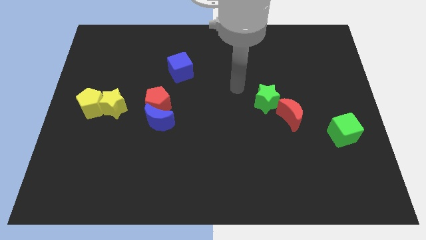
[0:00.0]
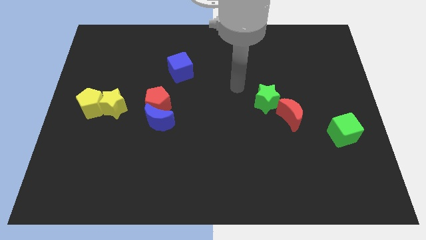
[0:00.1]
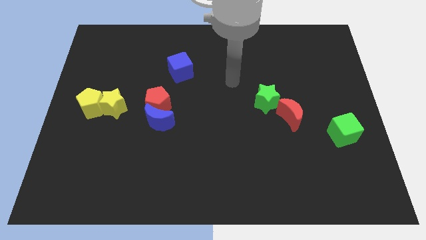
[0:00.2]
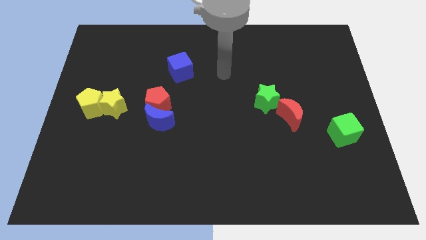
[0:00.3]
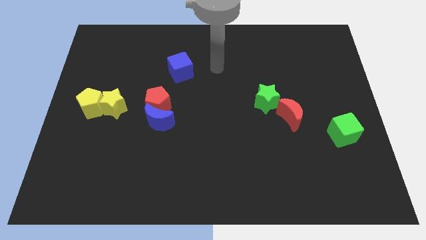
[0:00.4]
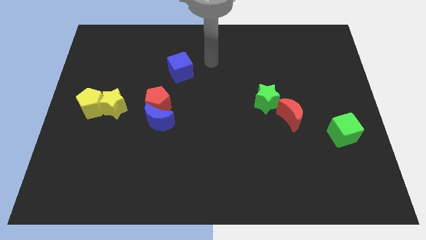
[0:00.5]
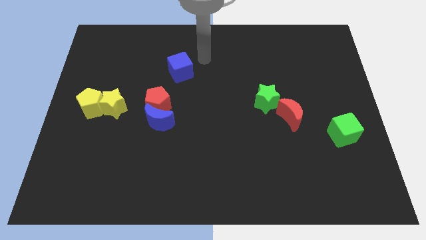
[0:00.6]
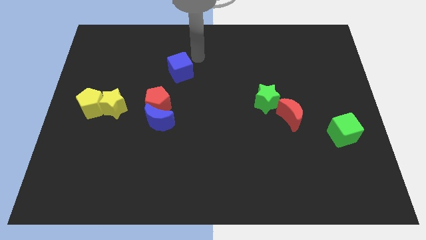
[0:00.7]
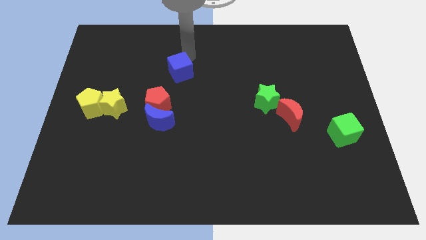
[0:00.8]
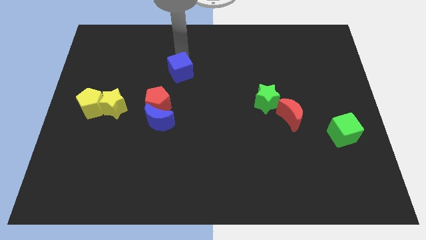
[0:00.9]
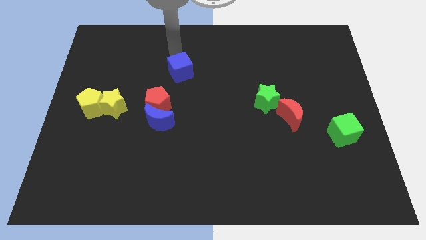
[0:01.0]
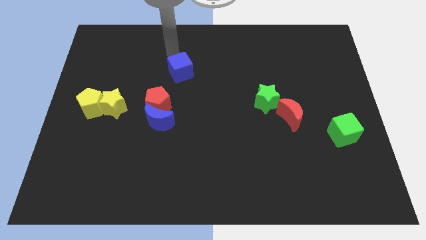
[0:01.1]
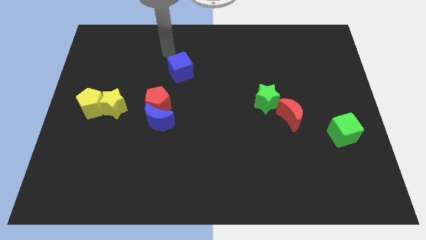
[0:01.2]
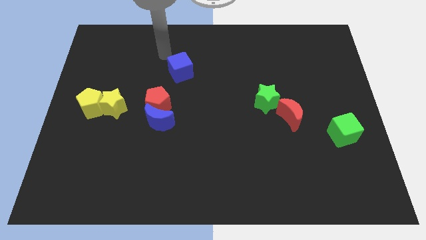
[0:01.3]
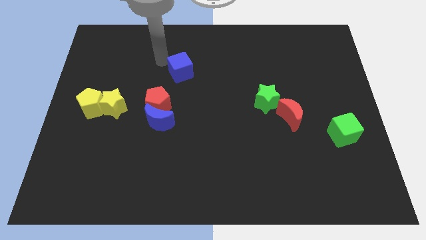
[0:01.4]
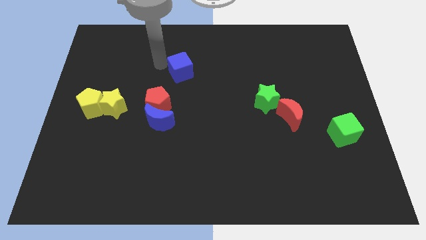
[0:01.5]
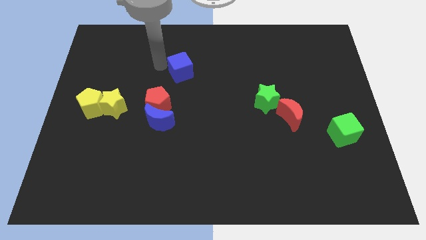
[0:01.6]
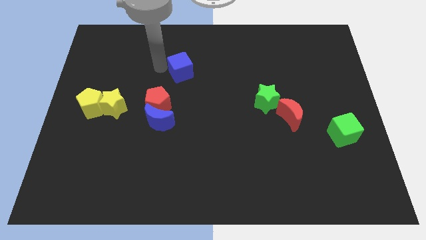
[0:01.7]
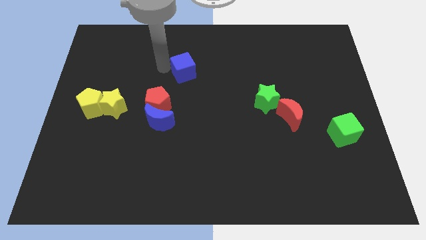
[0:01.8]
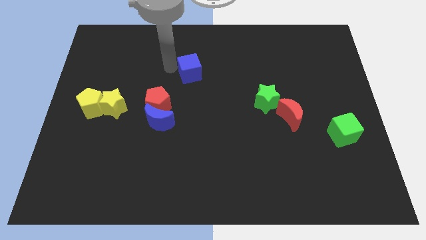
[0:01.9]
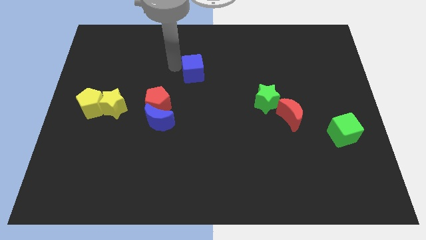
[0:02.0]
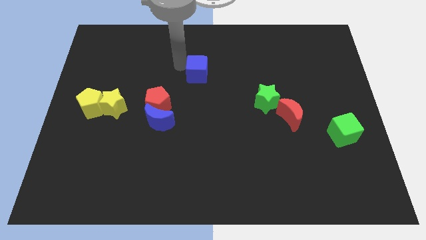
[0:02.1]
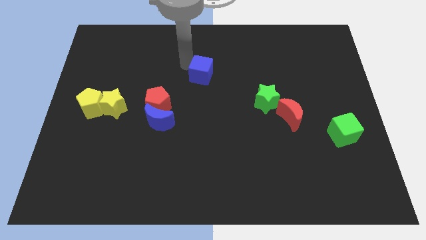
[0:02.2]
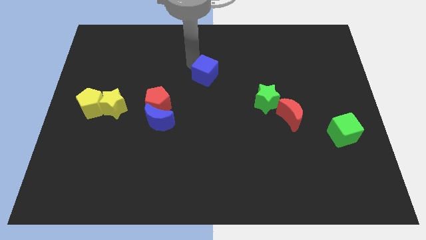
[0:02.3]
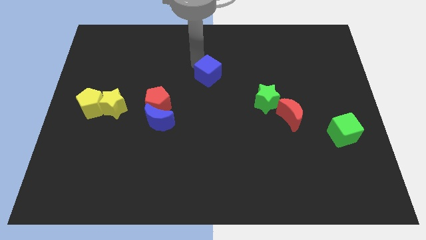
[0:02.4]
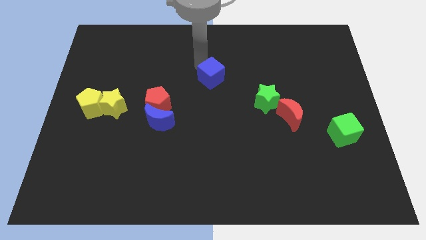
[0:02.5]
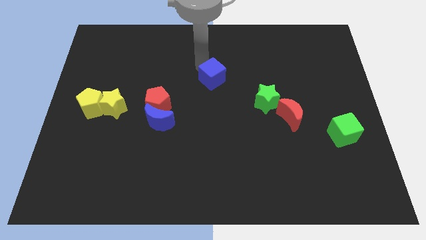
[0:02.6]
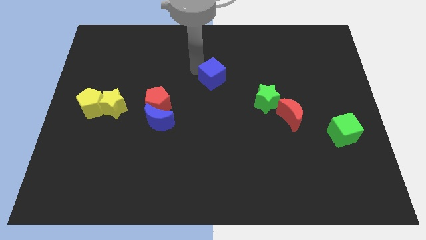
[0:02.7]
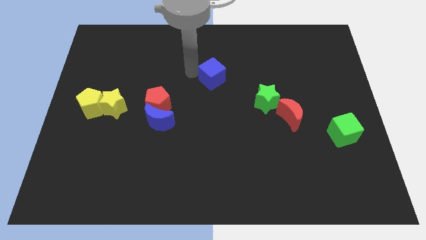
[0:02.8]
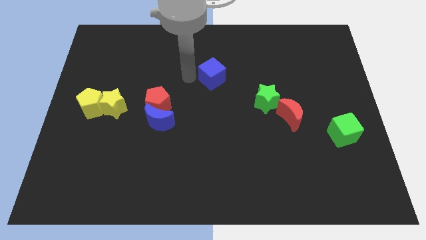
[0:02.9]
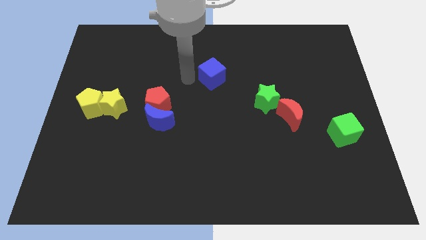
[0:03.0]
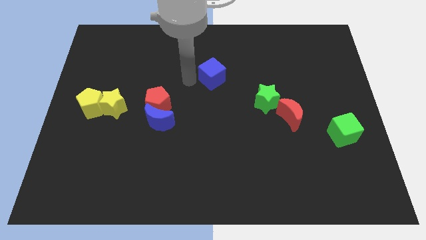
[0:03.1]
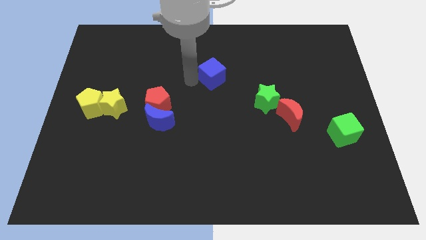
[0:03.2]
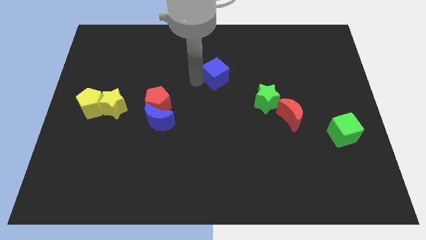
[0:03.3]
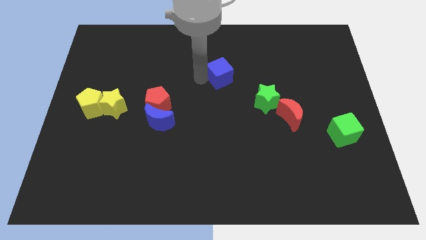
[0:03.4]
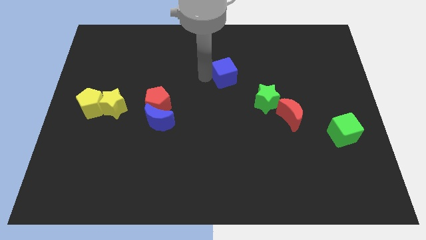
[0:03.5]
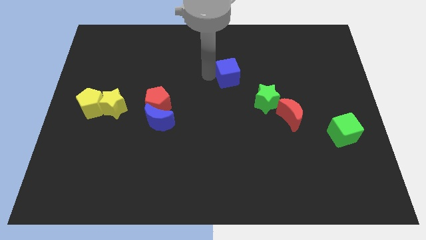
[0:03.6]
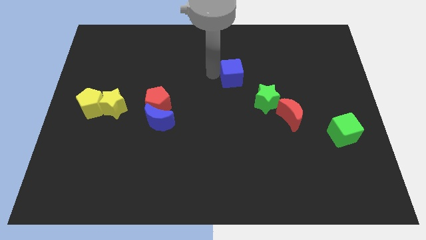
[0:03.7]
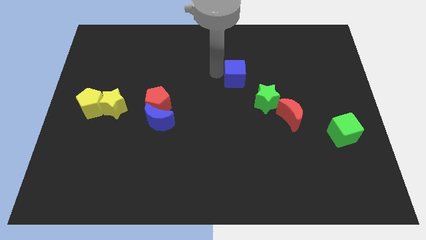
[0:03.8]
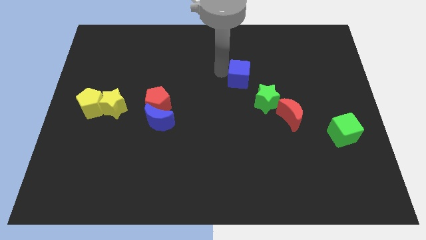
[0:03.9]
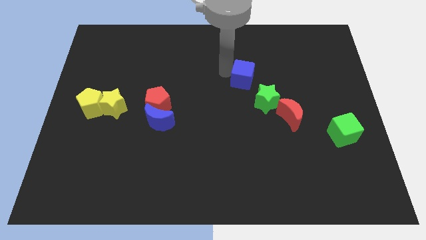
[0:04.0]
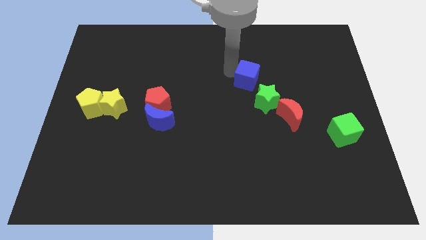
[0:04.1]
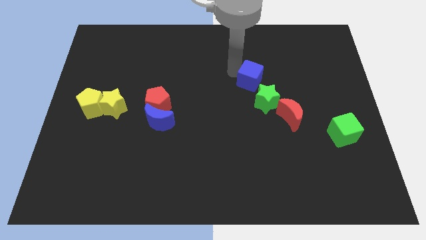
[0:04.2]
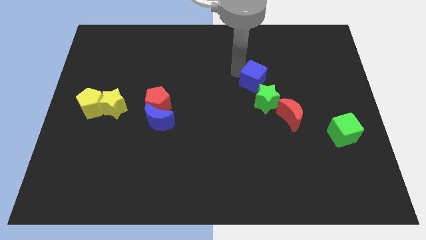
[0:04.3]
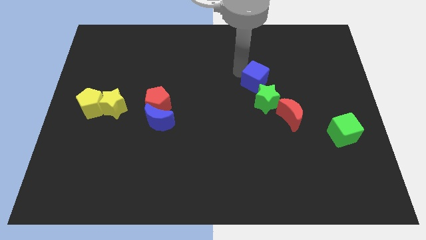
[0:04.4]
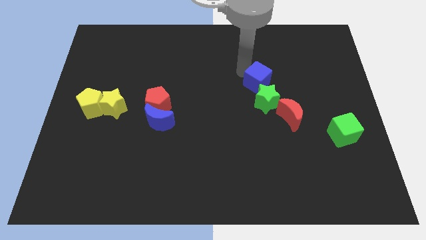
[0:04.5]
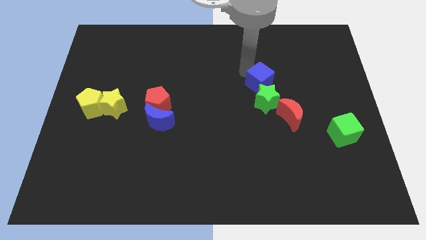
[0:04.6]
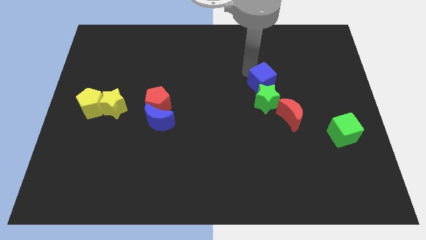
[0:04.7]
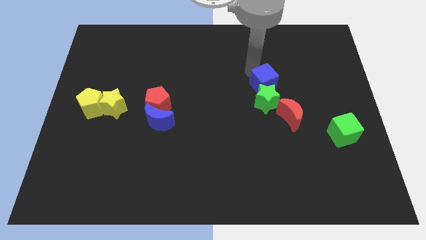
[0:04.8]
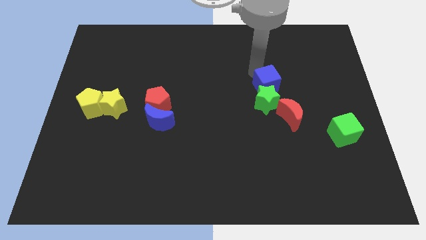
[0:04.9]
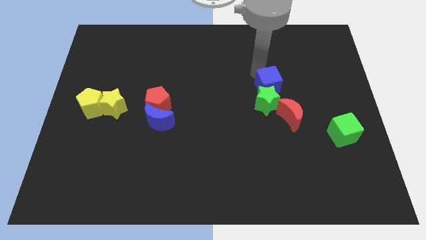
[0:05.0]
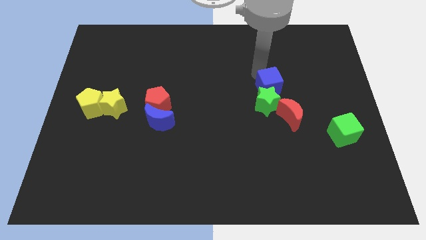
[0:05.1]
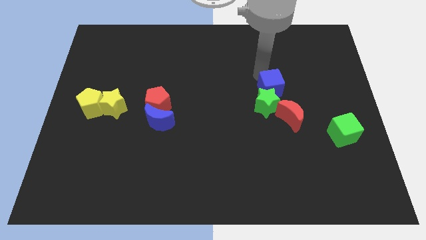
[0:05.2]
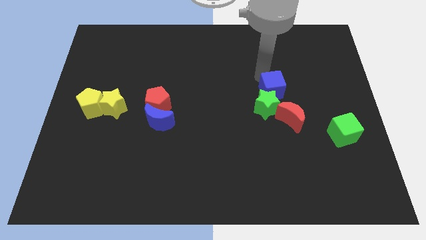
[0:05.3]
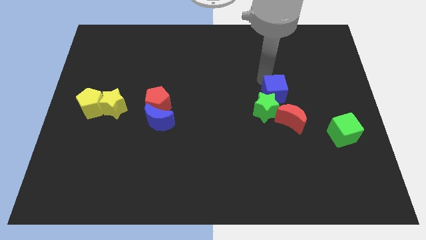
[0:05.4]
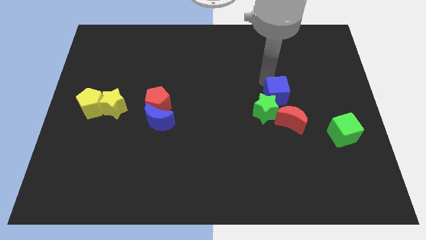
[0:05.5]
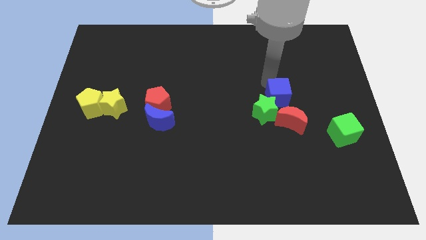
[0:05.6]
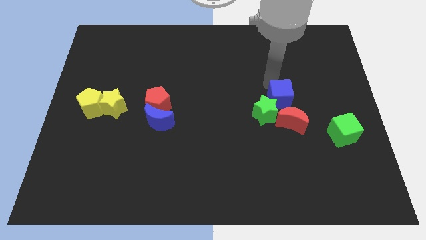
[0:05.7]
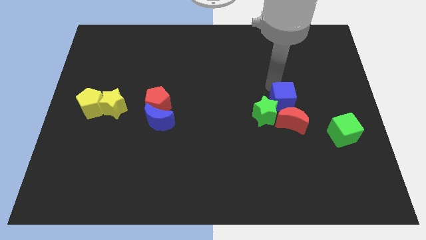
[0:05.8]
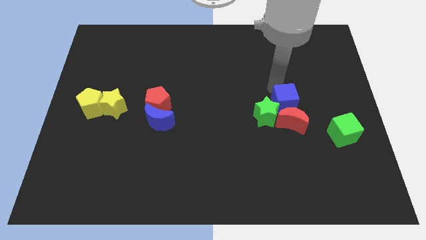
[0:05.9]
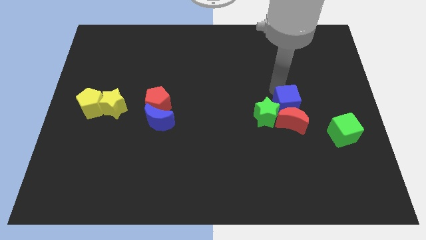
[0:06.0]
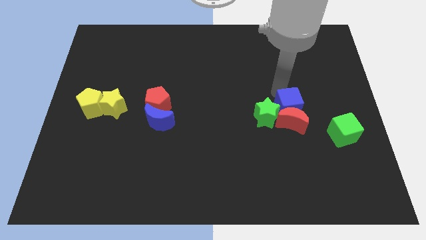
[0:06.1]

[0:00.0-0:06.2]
put the blue cube next to the red moon

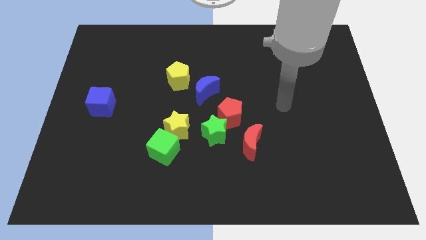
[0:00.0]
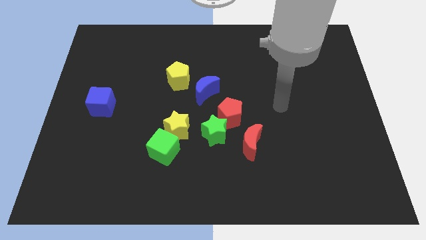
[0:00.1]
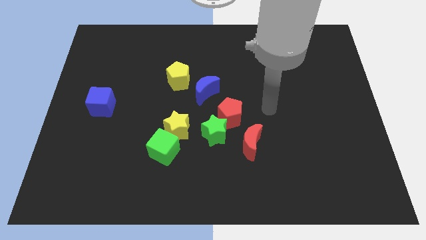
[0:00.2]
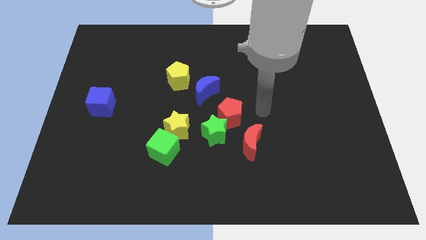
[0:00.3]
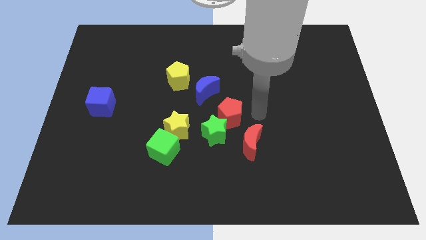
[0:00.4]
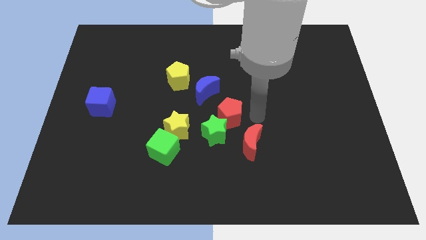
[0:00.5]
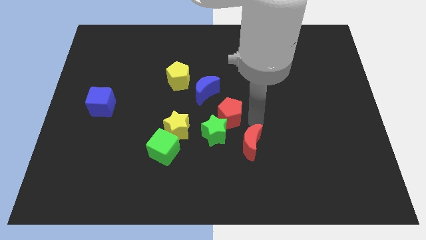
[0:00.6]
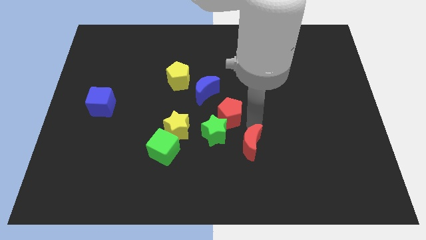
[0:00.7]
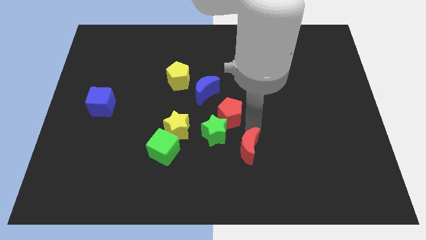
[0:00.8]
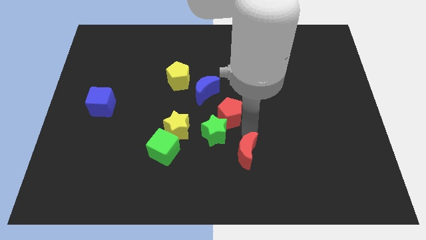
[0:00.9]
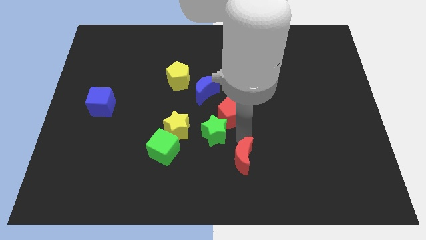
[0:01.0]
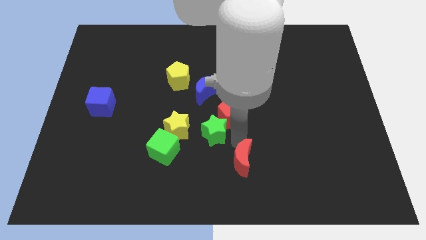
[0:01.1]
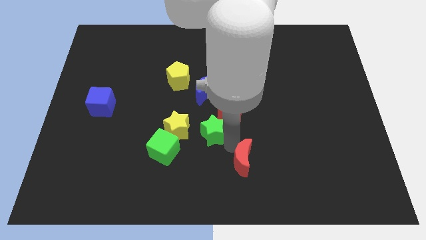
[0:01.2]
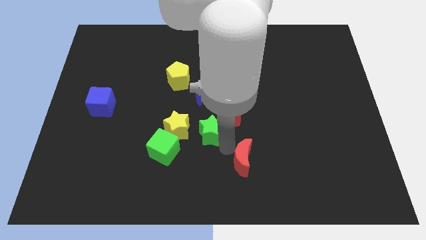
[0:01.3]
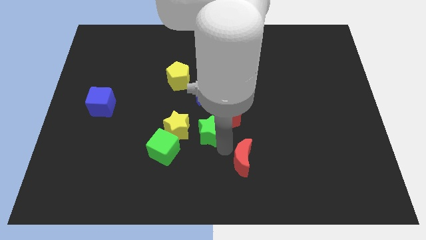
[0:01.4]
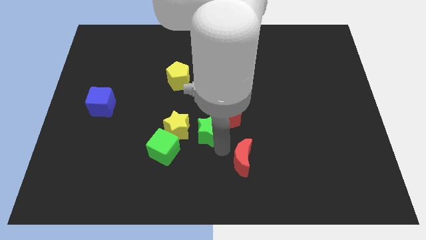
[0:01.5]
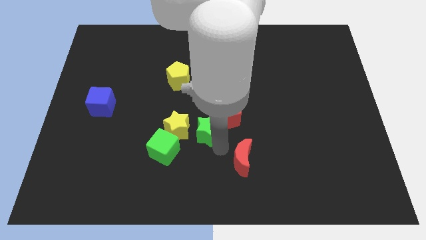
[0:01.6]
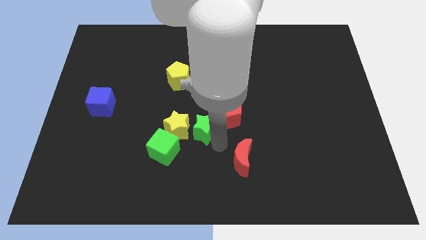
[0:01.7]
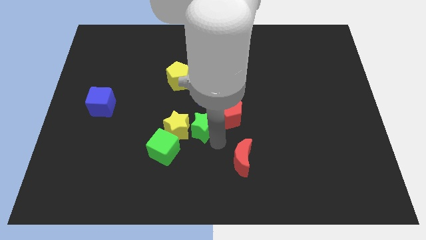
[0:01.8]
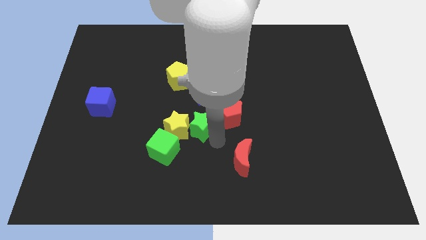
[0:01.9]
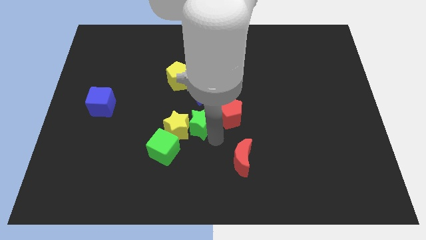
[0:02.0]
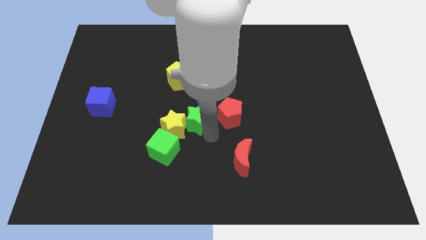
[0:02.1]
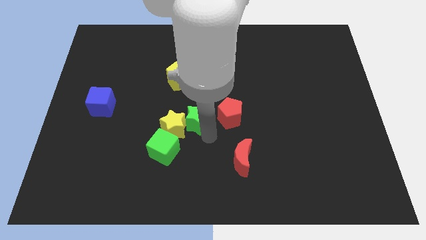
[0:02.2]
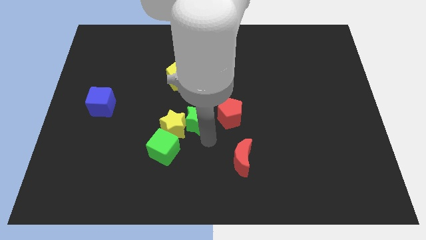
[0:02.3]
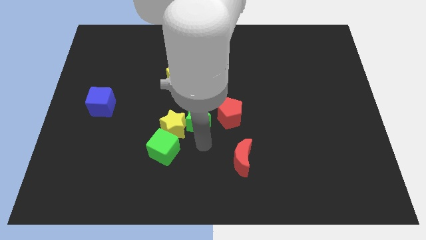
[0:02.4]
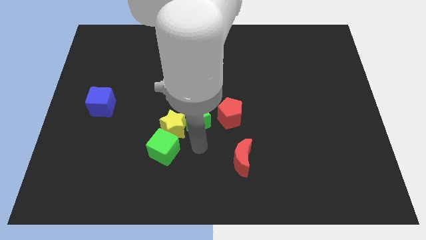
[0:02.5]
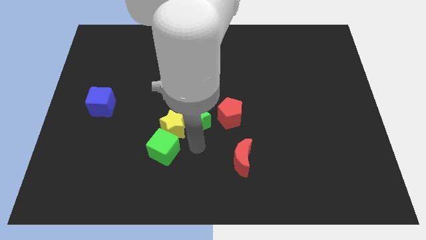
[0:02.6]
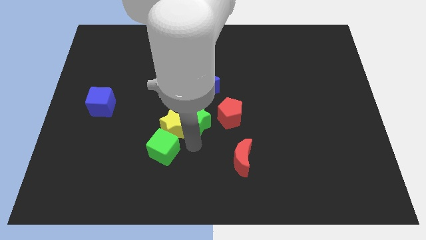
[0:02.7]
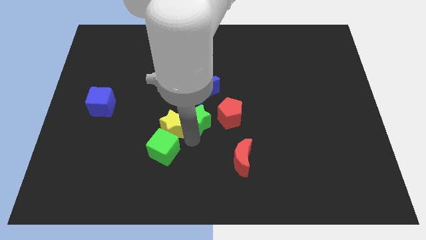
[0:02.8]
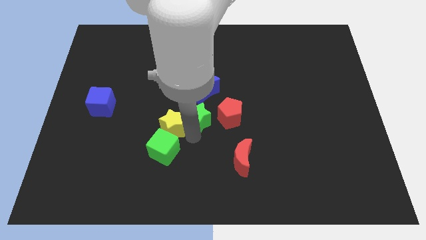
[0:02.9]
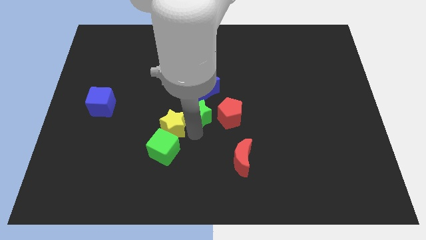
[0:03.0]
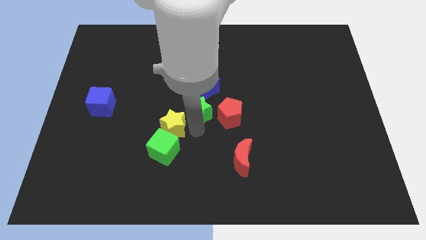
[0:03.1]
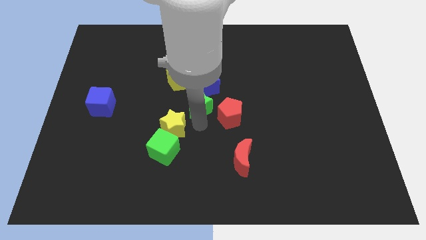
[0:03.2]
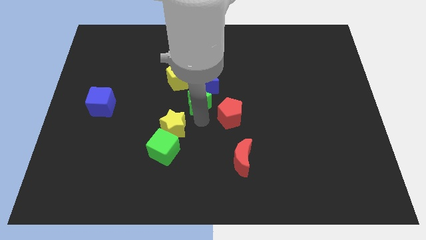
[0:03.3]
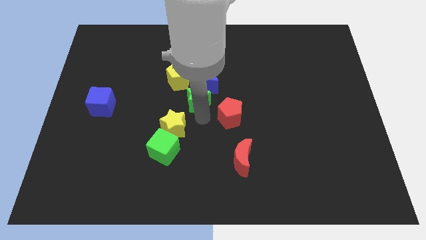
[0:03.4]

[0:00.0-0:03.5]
put the green star towards the blue moon
